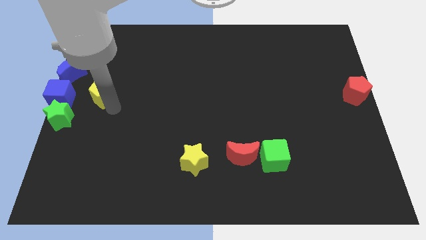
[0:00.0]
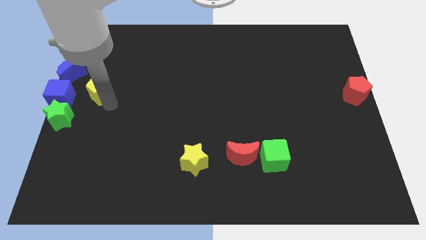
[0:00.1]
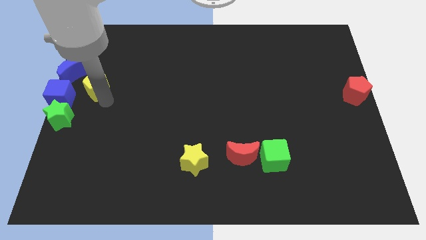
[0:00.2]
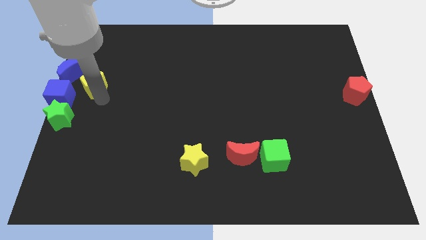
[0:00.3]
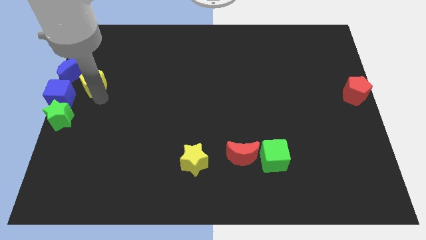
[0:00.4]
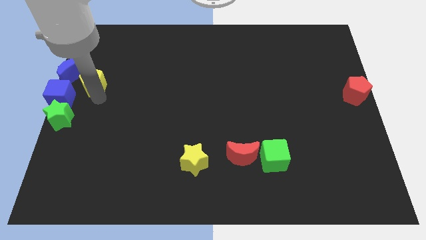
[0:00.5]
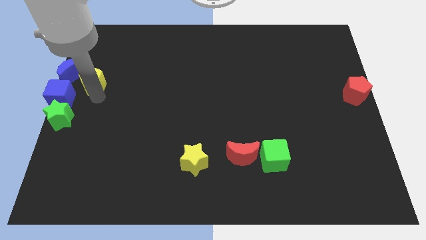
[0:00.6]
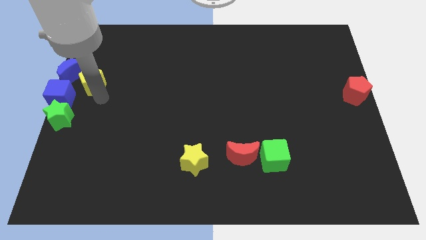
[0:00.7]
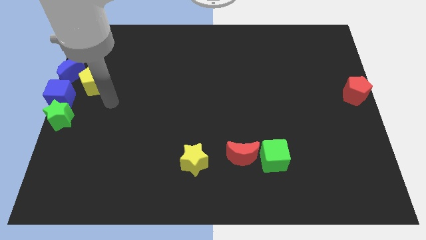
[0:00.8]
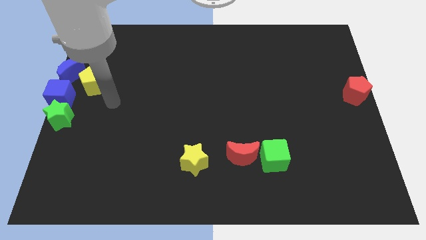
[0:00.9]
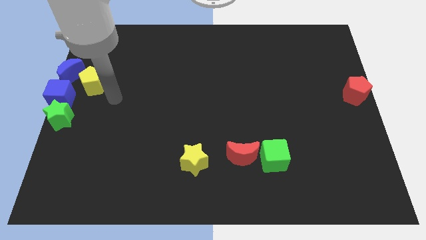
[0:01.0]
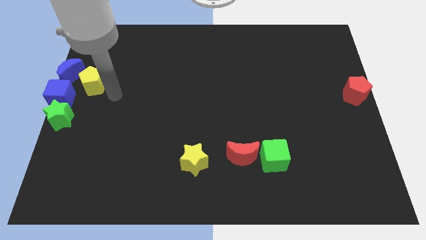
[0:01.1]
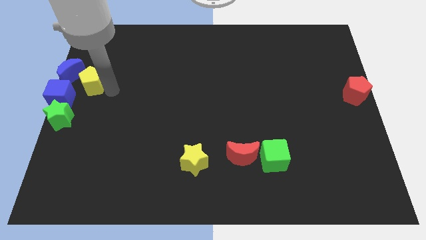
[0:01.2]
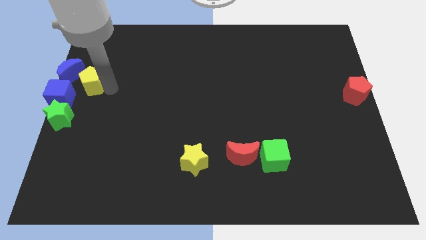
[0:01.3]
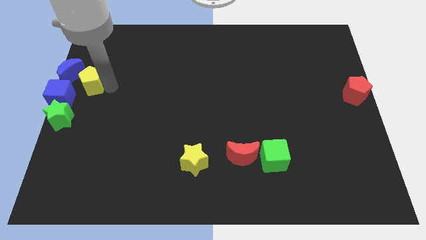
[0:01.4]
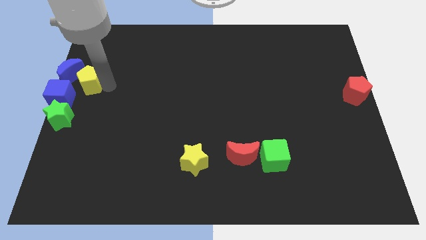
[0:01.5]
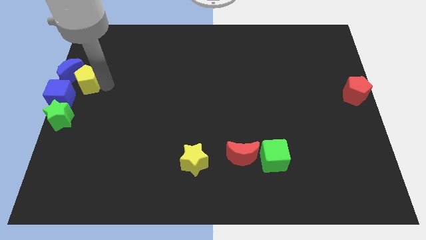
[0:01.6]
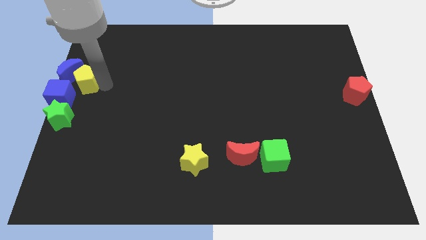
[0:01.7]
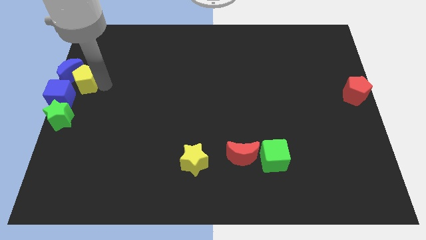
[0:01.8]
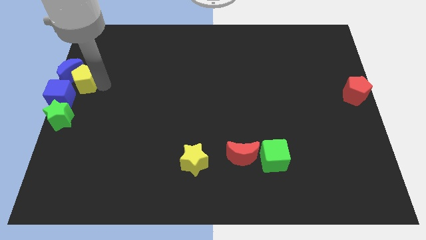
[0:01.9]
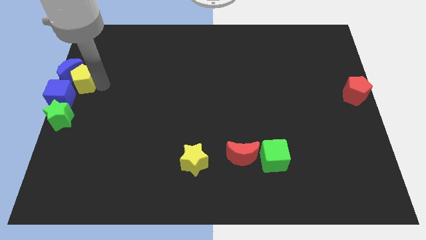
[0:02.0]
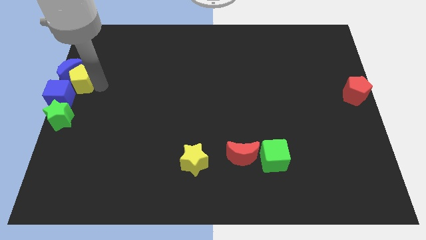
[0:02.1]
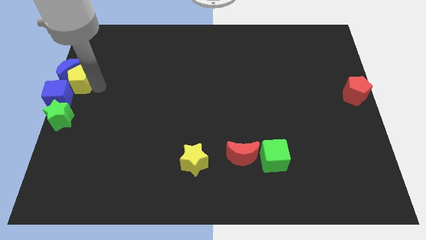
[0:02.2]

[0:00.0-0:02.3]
push the yellow pentagon to the right of the blue crescent

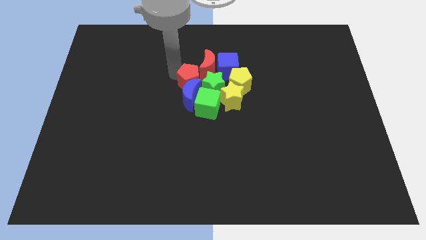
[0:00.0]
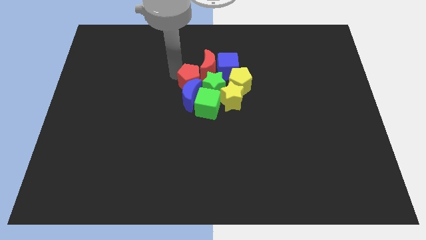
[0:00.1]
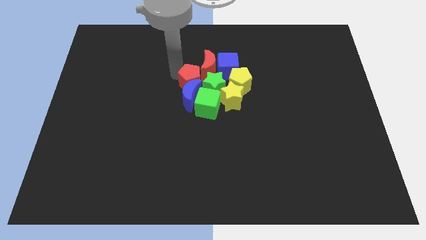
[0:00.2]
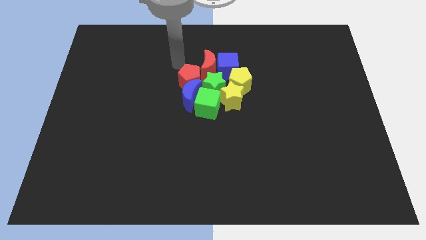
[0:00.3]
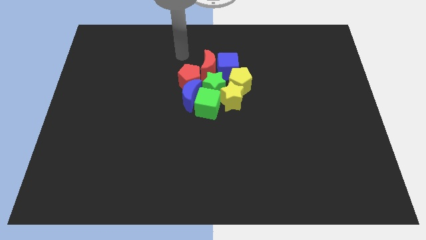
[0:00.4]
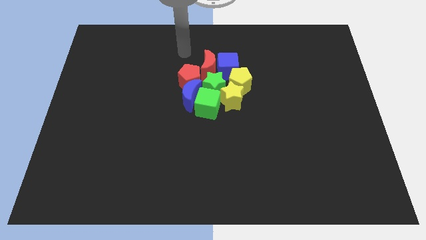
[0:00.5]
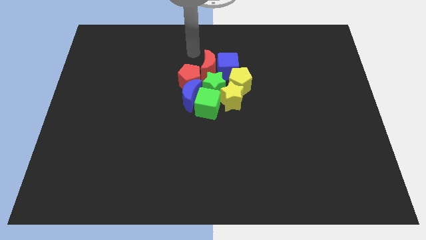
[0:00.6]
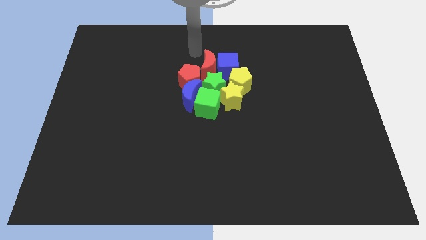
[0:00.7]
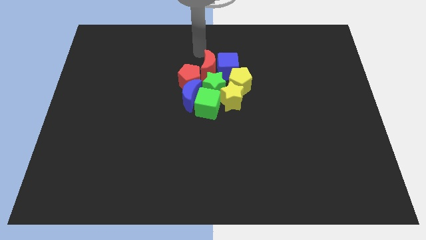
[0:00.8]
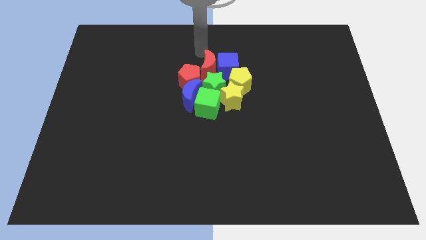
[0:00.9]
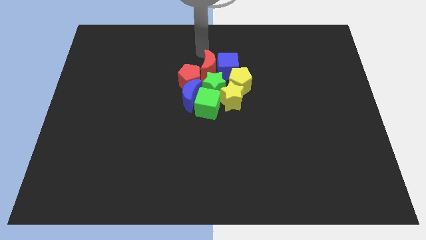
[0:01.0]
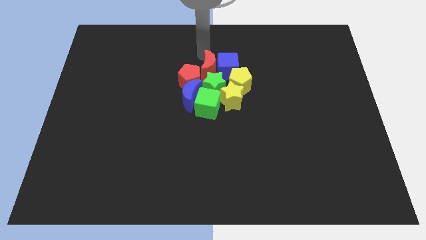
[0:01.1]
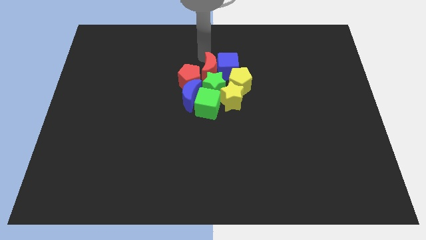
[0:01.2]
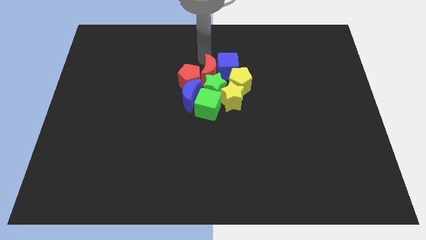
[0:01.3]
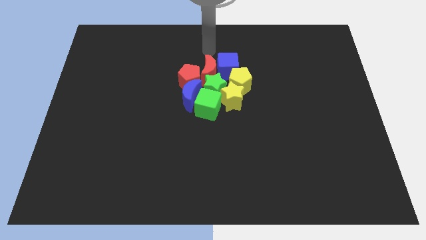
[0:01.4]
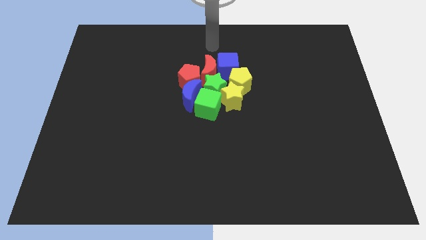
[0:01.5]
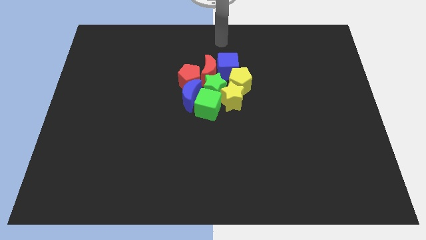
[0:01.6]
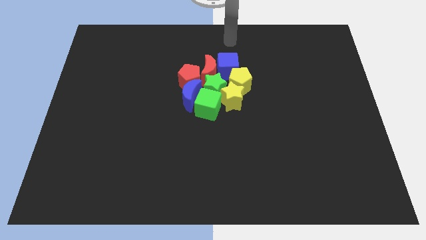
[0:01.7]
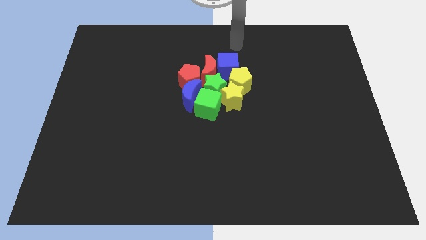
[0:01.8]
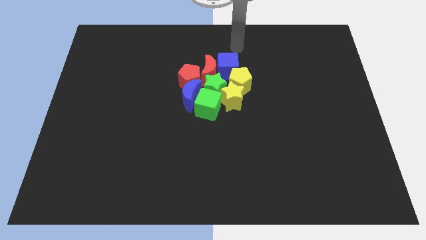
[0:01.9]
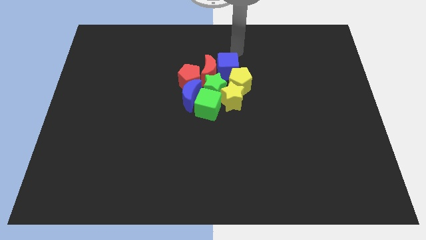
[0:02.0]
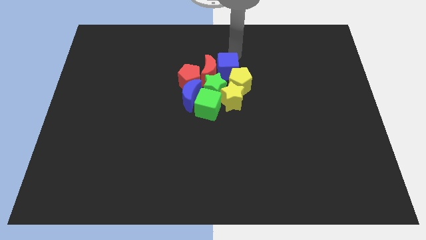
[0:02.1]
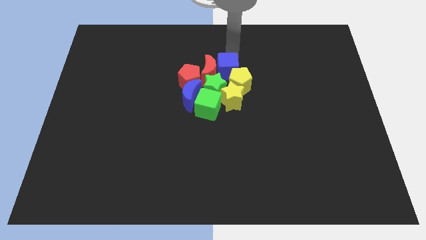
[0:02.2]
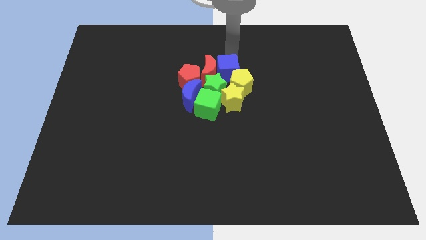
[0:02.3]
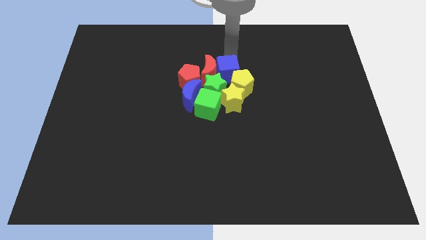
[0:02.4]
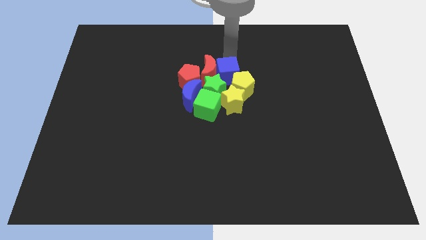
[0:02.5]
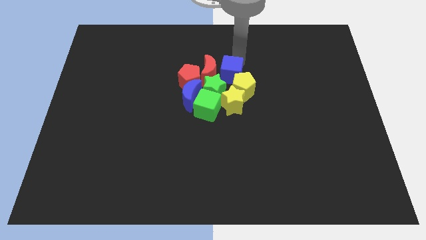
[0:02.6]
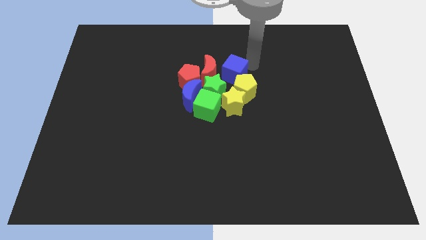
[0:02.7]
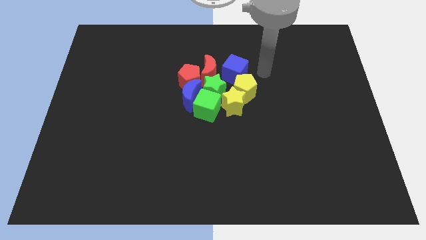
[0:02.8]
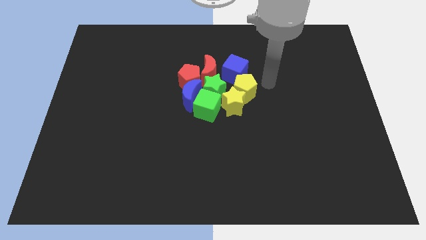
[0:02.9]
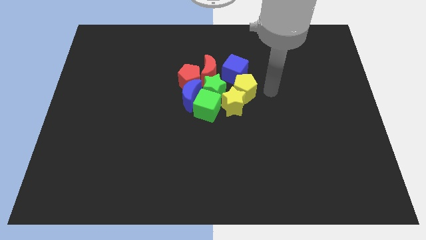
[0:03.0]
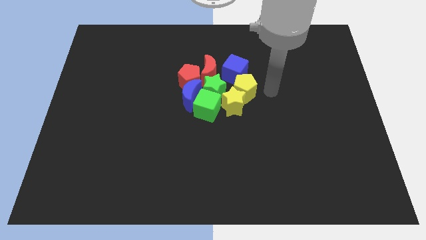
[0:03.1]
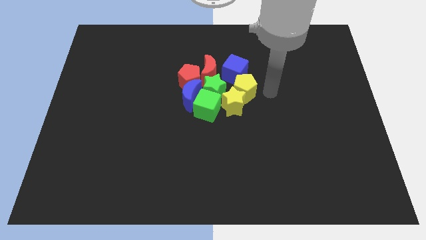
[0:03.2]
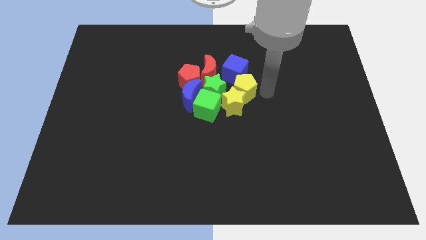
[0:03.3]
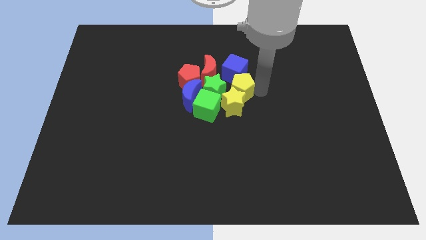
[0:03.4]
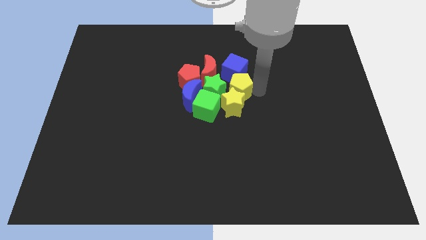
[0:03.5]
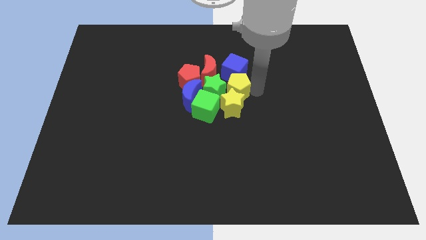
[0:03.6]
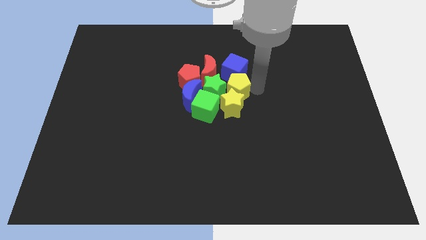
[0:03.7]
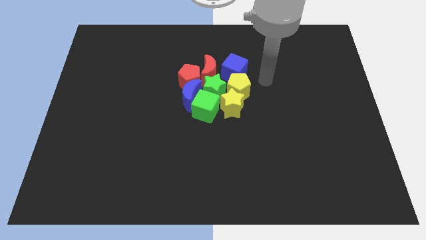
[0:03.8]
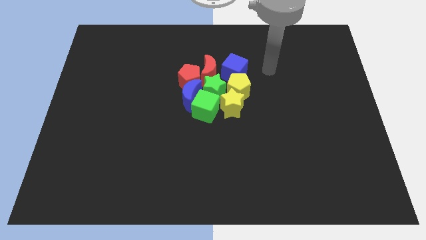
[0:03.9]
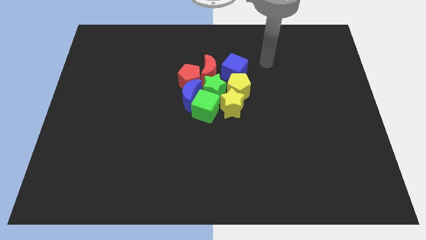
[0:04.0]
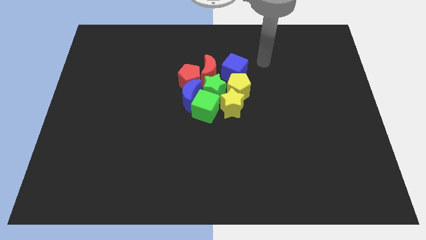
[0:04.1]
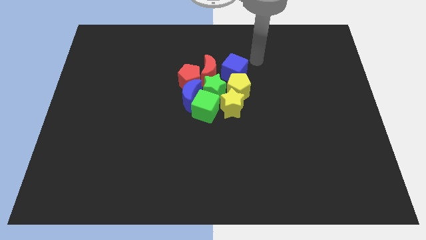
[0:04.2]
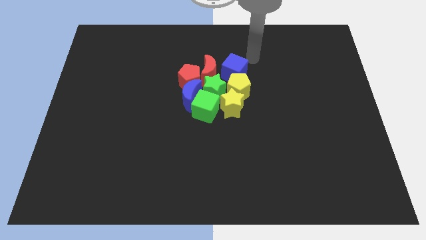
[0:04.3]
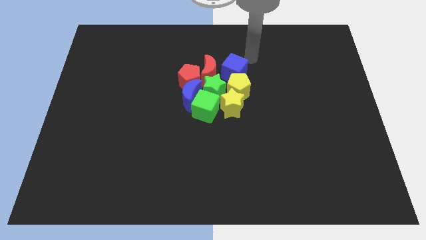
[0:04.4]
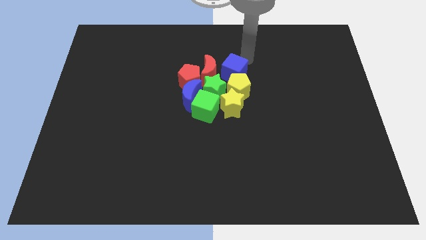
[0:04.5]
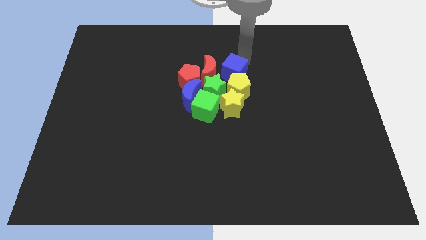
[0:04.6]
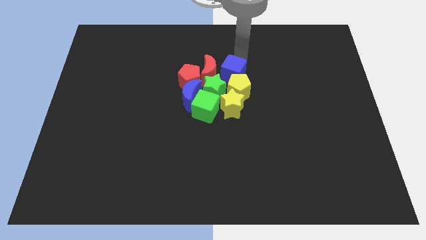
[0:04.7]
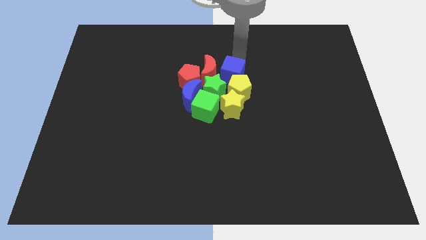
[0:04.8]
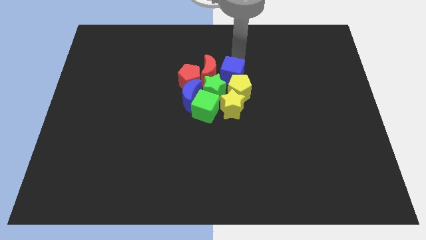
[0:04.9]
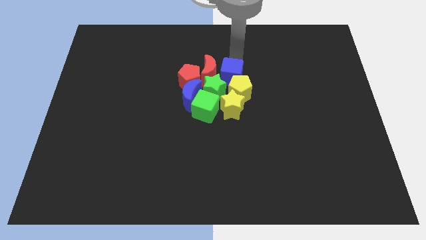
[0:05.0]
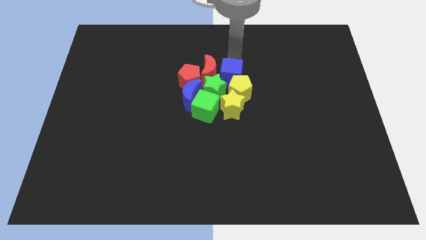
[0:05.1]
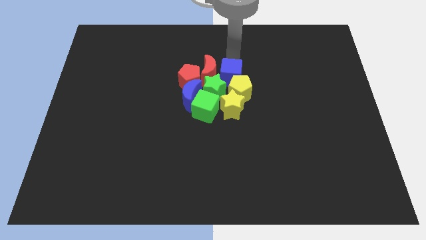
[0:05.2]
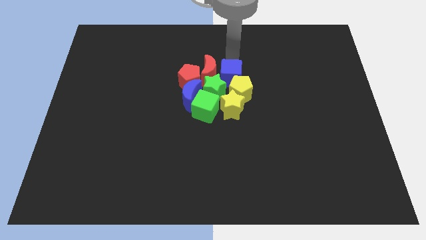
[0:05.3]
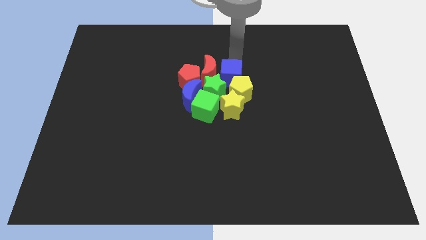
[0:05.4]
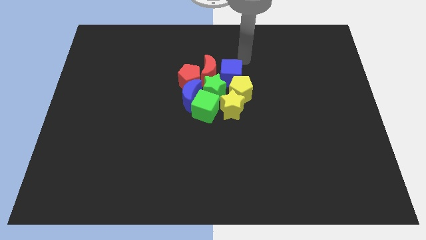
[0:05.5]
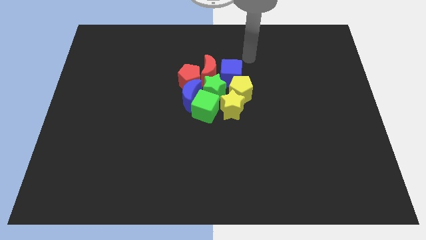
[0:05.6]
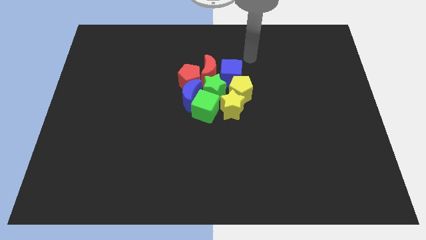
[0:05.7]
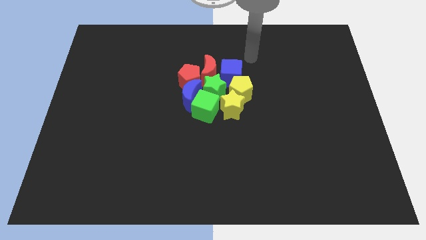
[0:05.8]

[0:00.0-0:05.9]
move your arm close to the blue cube

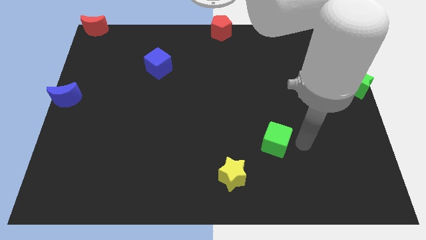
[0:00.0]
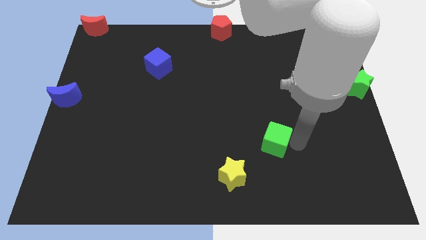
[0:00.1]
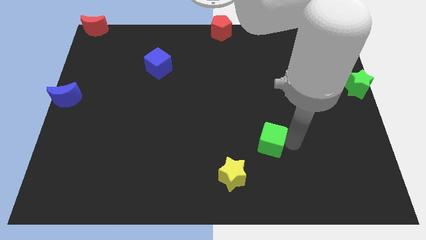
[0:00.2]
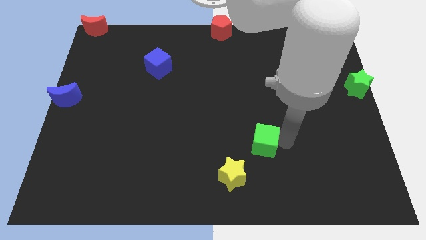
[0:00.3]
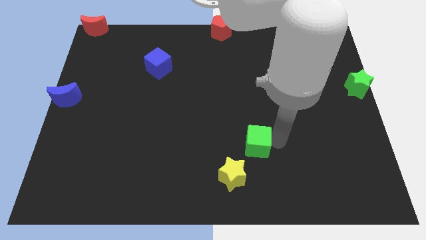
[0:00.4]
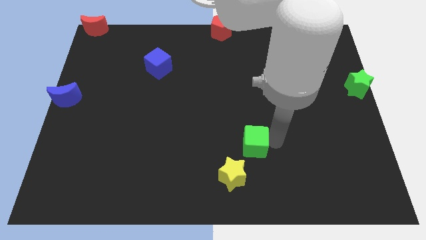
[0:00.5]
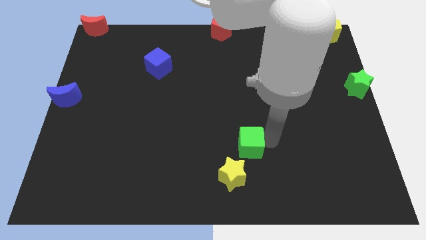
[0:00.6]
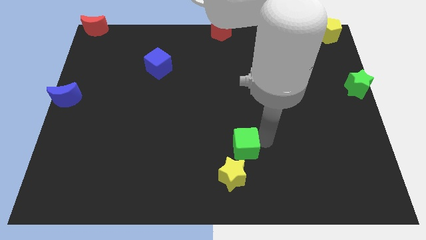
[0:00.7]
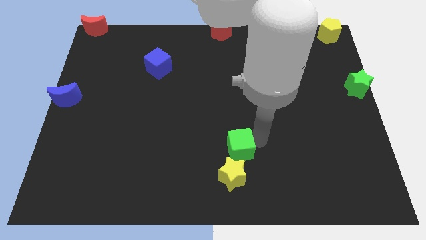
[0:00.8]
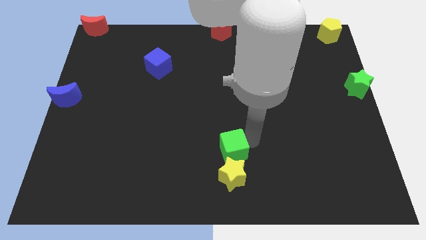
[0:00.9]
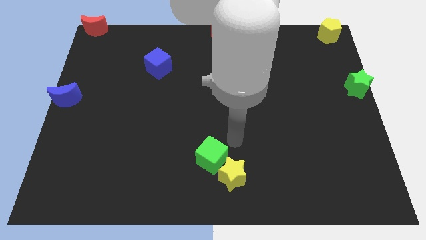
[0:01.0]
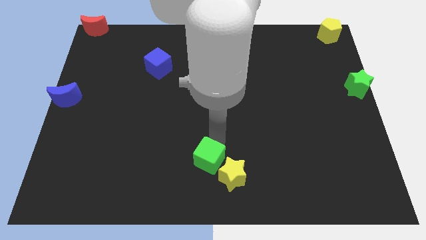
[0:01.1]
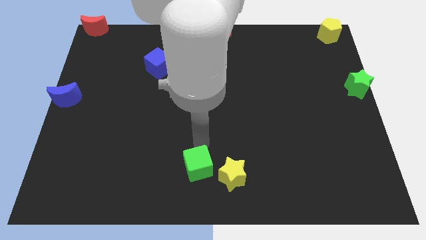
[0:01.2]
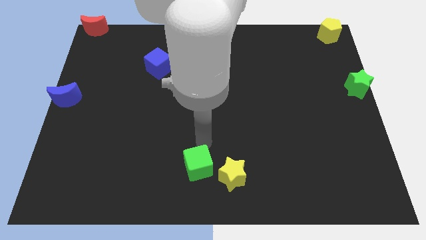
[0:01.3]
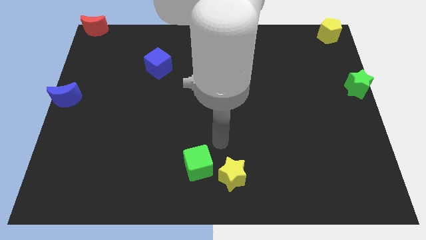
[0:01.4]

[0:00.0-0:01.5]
place the green cube left to the yellow star
